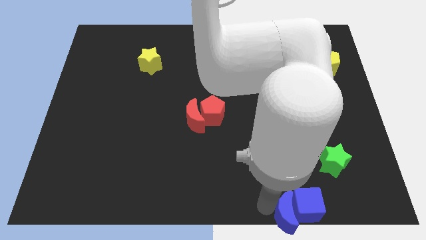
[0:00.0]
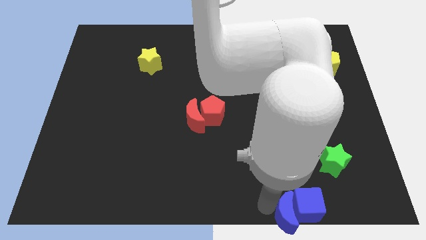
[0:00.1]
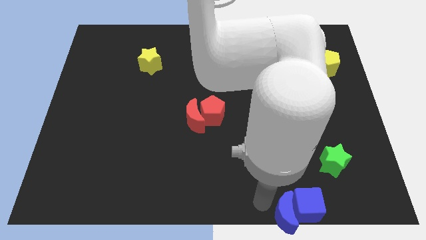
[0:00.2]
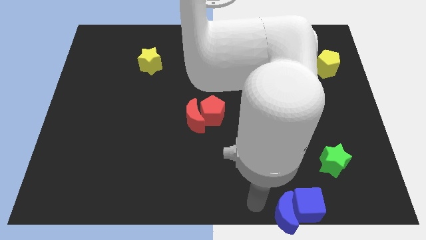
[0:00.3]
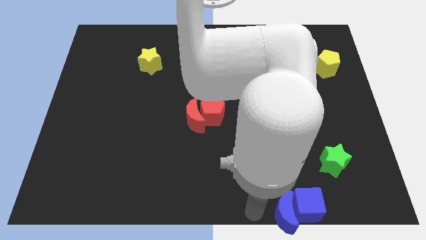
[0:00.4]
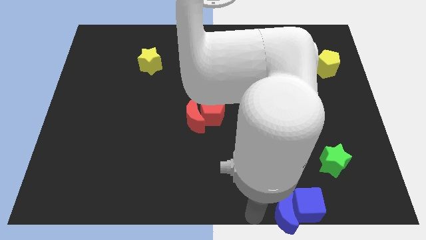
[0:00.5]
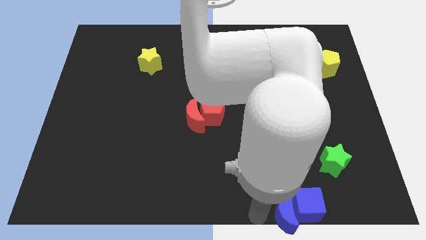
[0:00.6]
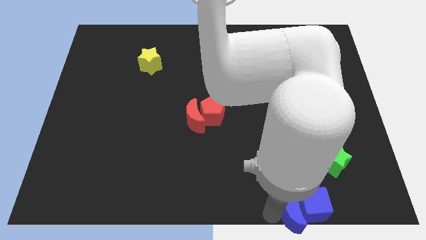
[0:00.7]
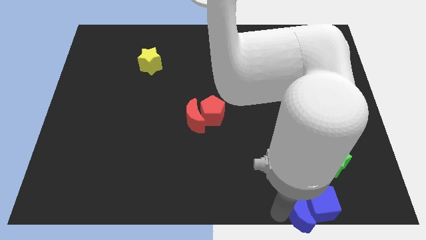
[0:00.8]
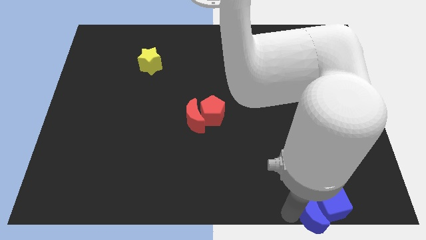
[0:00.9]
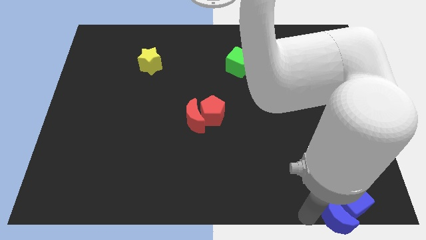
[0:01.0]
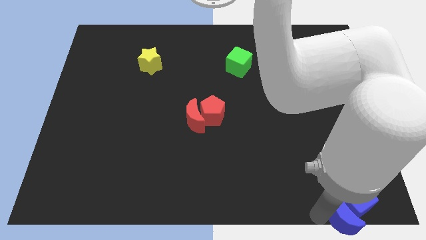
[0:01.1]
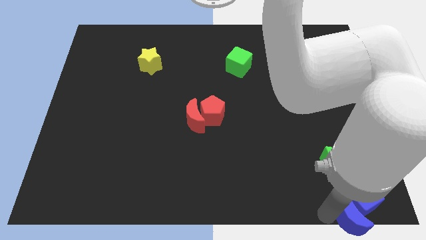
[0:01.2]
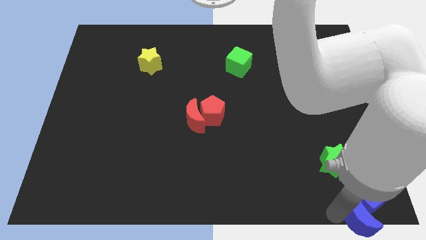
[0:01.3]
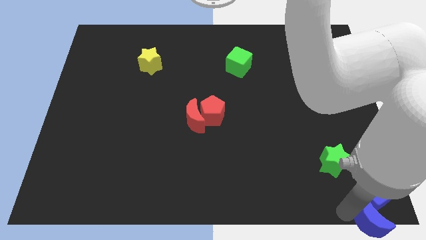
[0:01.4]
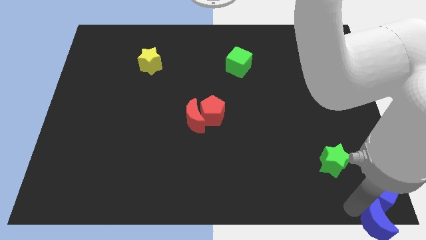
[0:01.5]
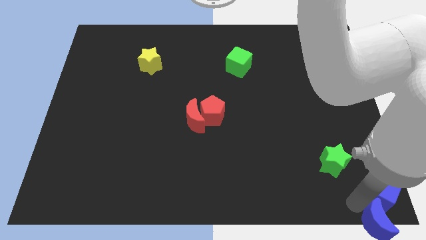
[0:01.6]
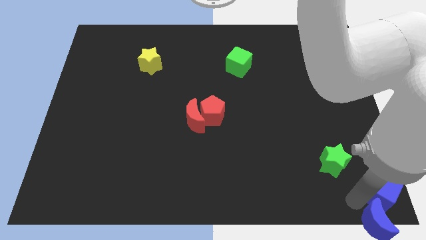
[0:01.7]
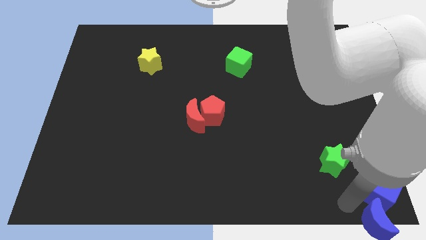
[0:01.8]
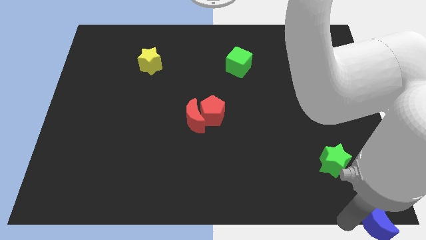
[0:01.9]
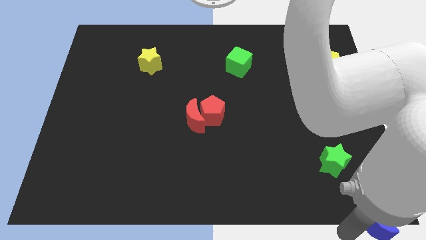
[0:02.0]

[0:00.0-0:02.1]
push blue blocks to the bottom right

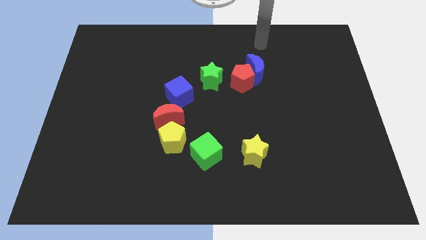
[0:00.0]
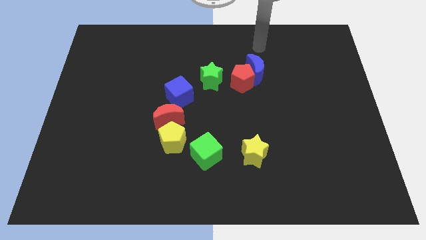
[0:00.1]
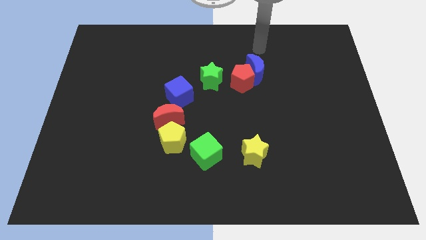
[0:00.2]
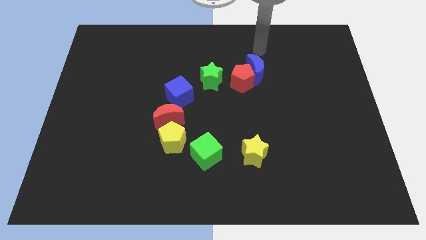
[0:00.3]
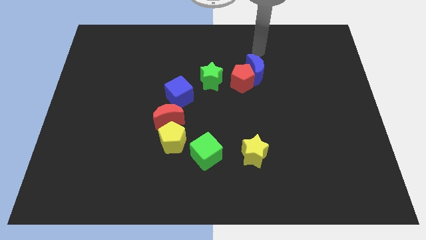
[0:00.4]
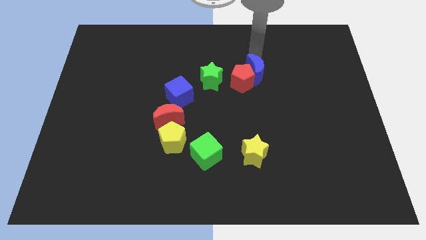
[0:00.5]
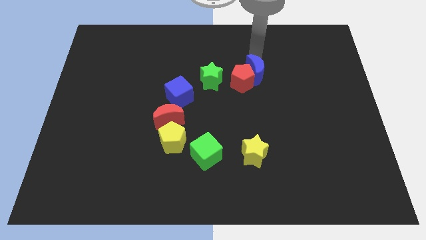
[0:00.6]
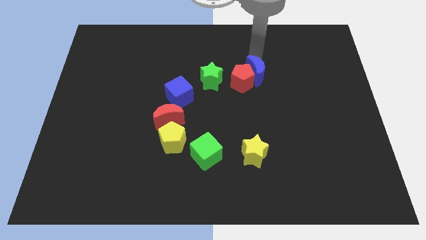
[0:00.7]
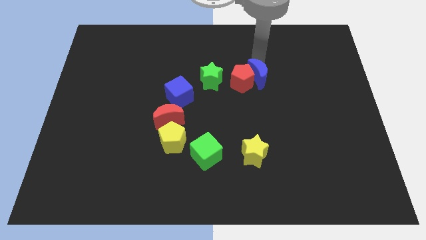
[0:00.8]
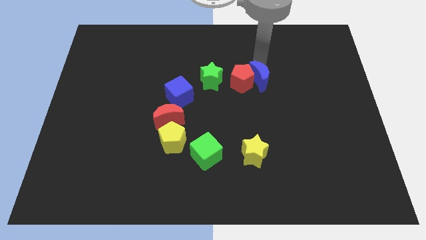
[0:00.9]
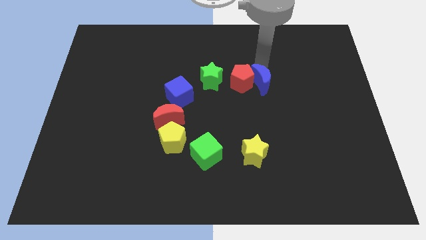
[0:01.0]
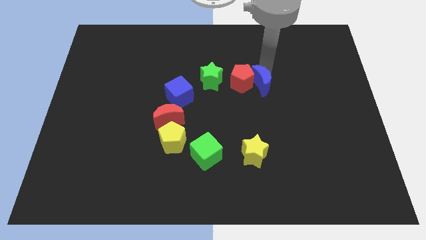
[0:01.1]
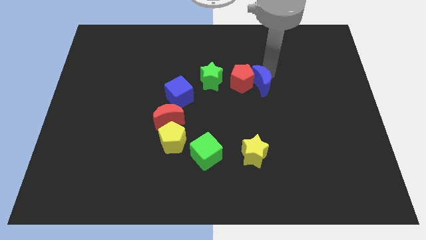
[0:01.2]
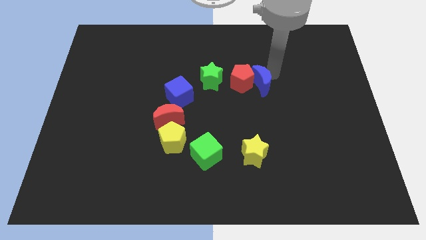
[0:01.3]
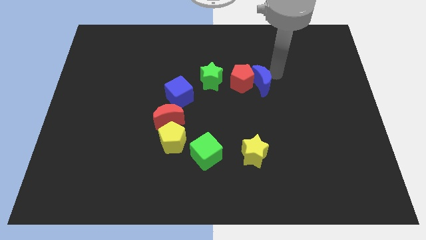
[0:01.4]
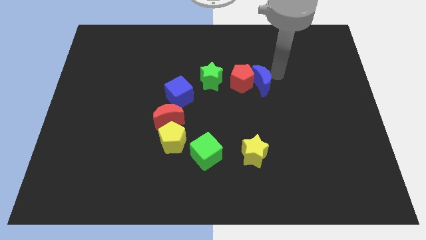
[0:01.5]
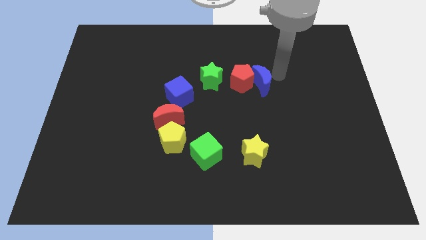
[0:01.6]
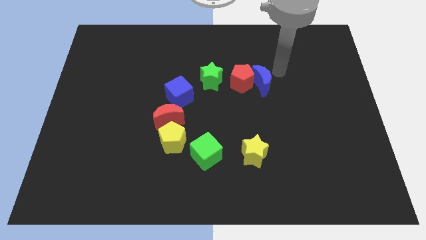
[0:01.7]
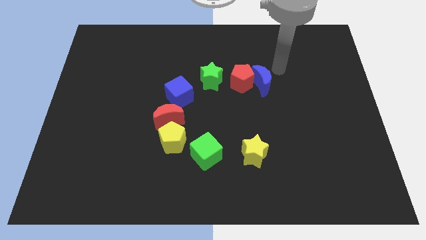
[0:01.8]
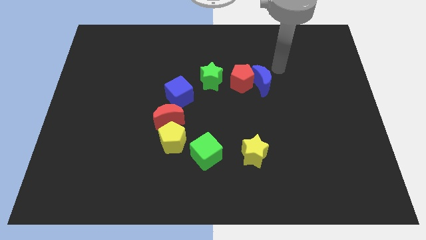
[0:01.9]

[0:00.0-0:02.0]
slightly push the blue moon downwards

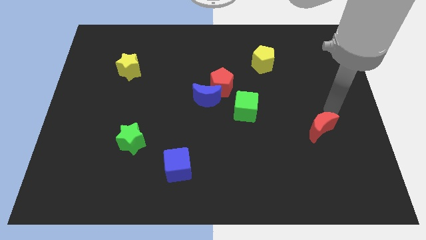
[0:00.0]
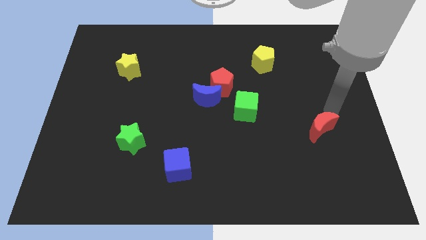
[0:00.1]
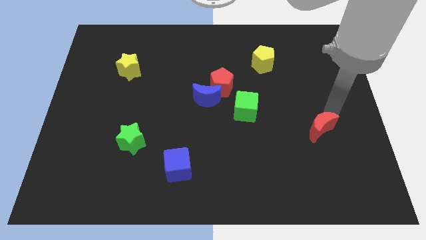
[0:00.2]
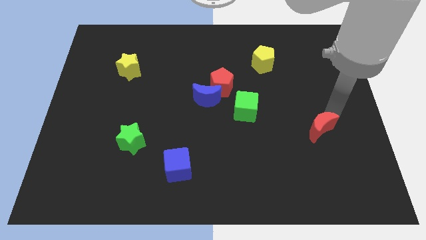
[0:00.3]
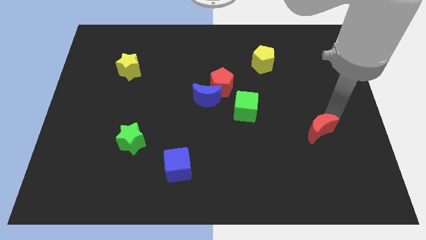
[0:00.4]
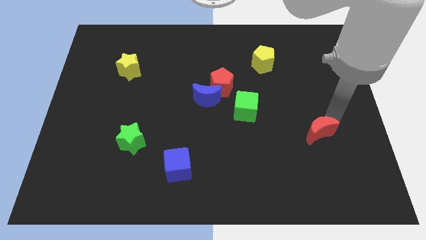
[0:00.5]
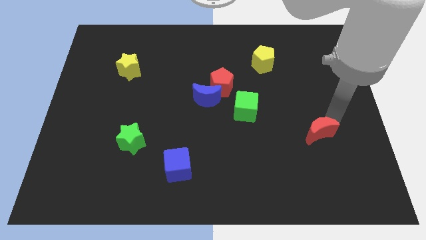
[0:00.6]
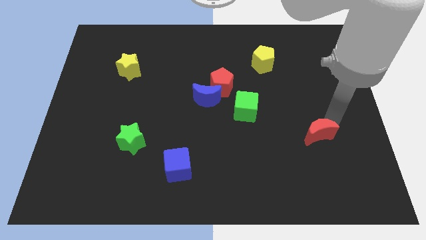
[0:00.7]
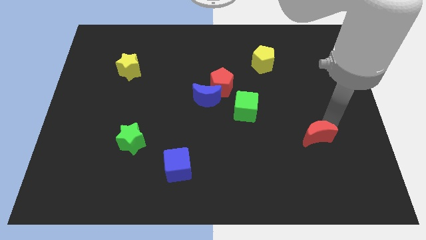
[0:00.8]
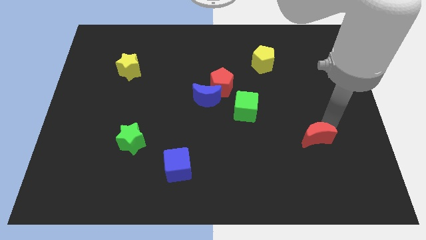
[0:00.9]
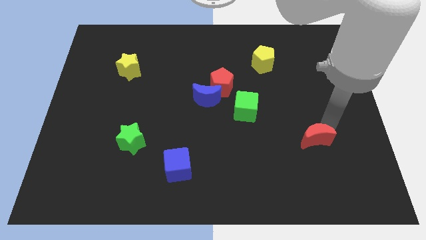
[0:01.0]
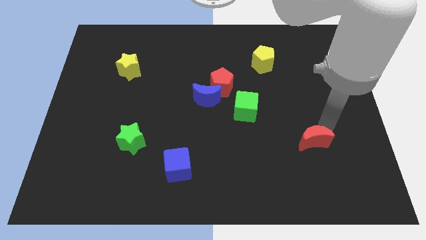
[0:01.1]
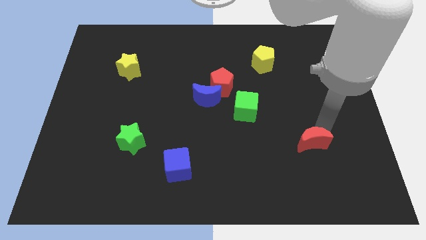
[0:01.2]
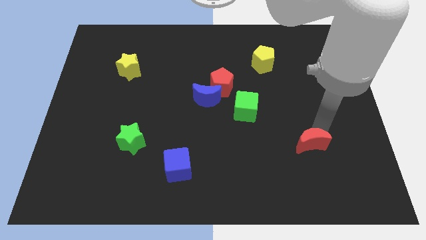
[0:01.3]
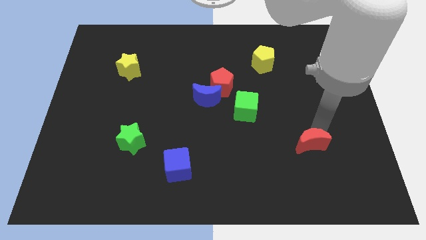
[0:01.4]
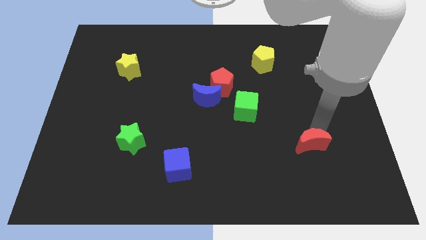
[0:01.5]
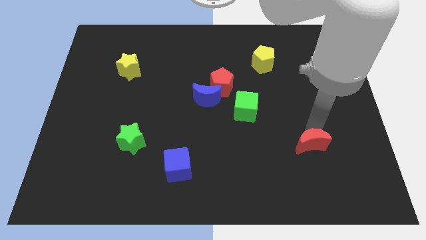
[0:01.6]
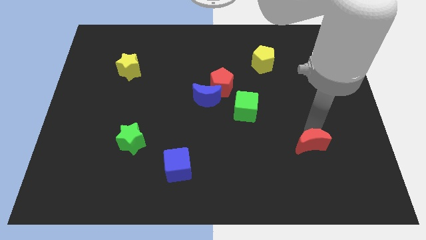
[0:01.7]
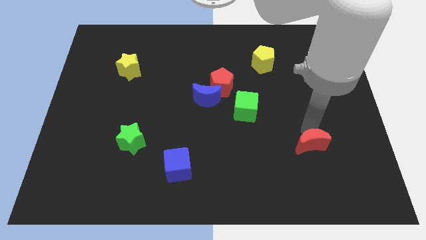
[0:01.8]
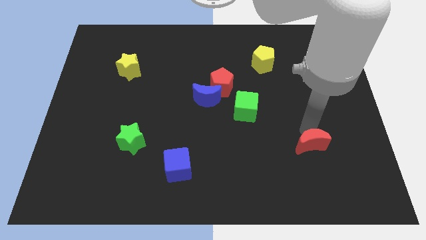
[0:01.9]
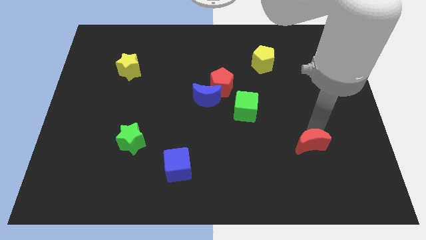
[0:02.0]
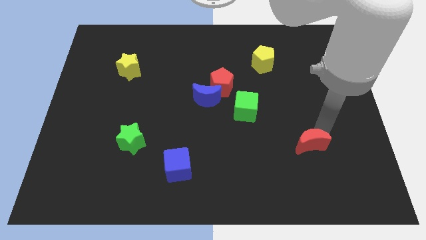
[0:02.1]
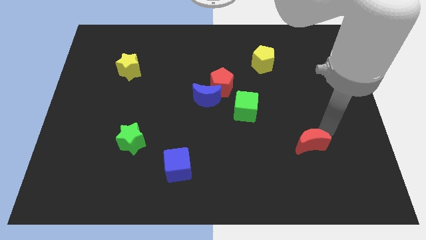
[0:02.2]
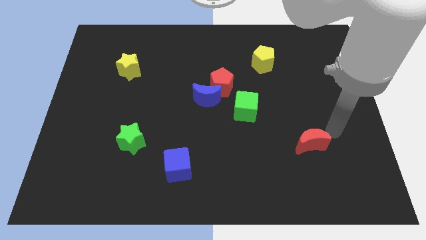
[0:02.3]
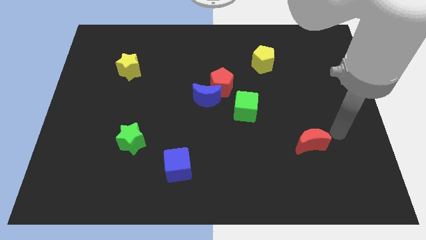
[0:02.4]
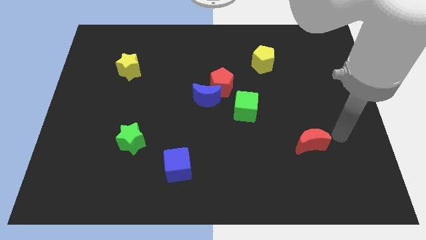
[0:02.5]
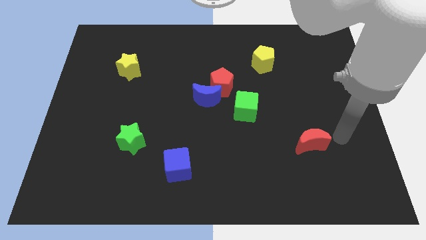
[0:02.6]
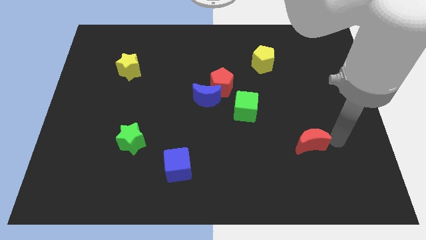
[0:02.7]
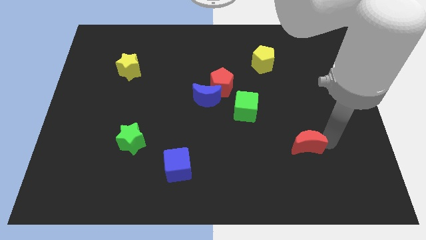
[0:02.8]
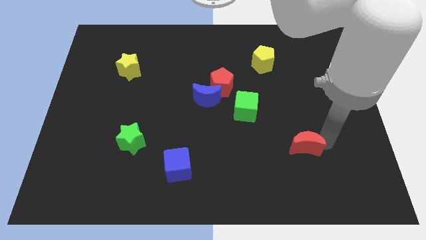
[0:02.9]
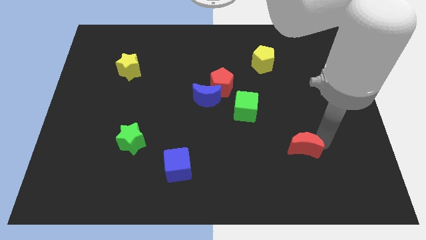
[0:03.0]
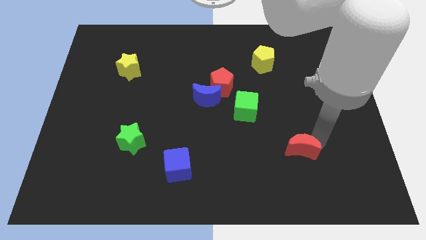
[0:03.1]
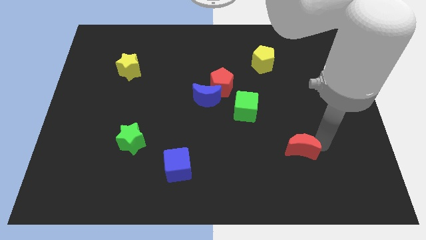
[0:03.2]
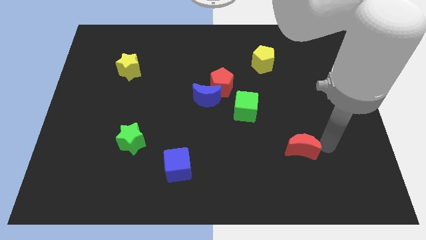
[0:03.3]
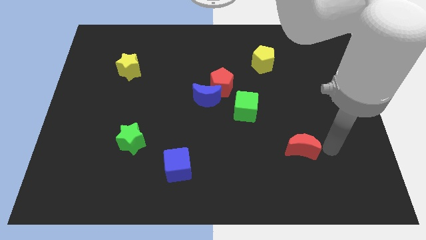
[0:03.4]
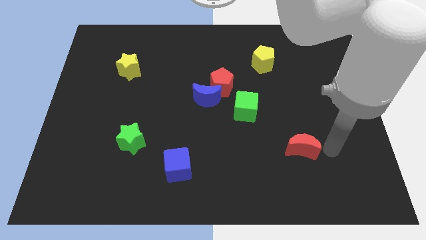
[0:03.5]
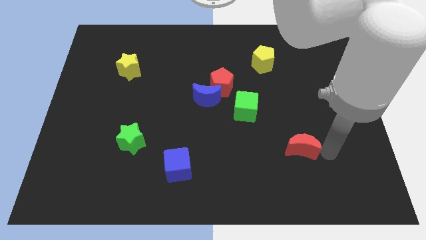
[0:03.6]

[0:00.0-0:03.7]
move red crescent around

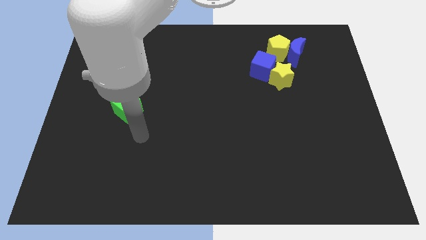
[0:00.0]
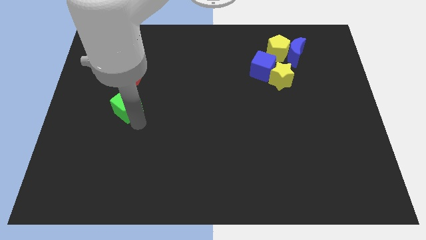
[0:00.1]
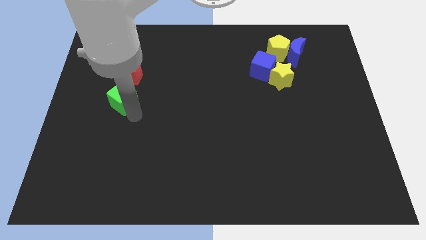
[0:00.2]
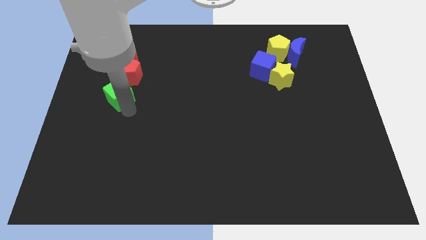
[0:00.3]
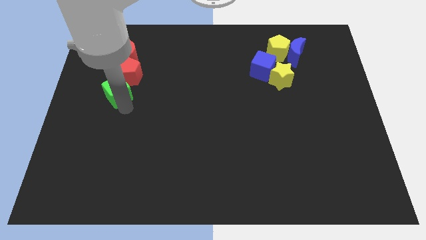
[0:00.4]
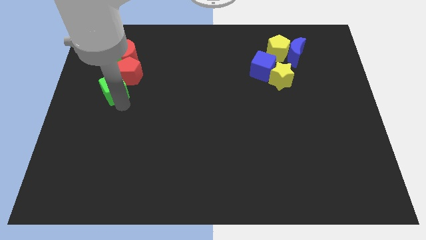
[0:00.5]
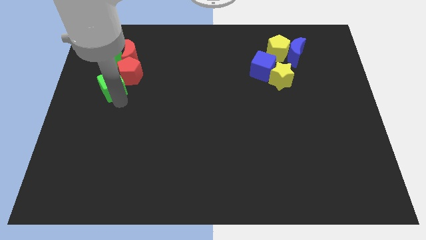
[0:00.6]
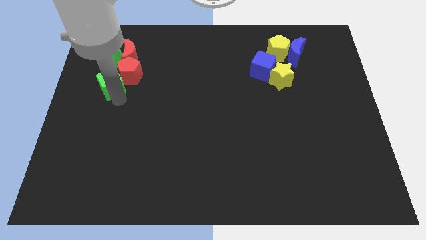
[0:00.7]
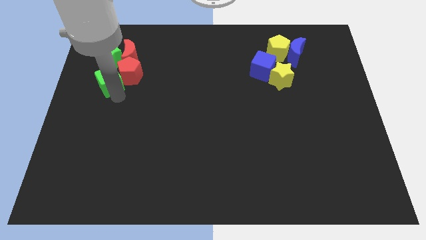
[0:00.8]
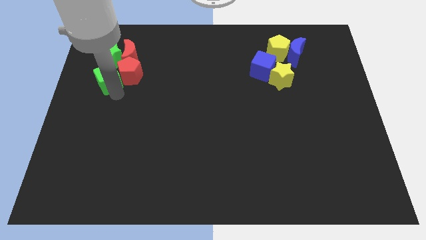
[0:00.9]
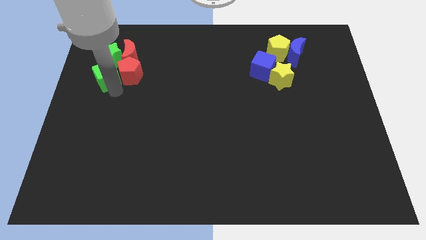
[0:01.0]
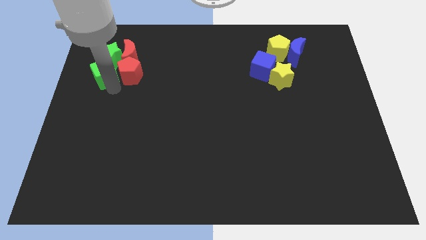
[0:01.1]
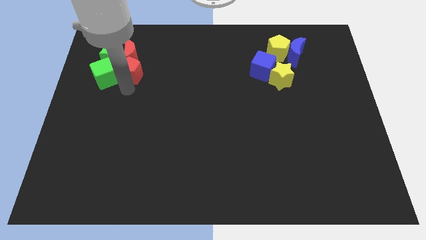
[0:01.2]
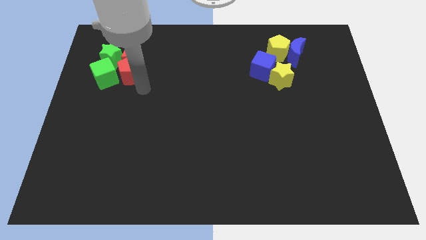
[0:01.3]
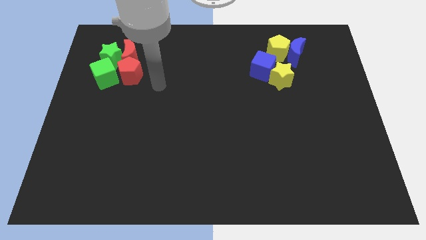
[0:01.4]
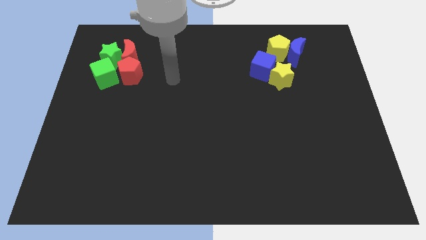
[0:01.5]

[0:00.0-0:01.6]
push the green cube to the left side of the red pentagon
